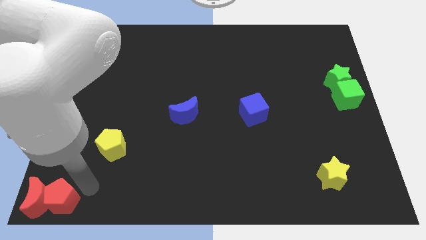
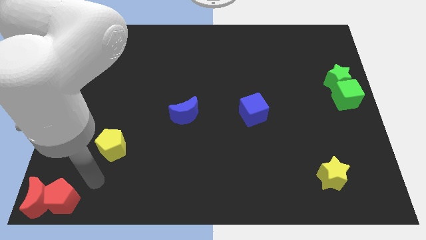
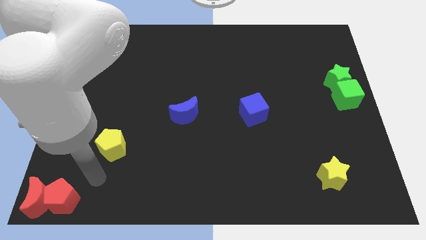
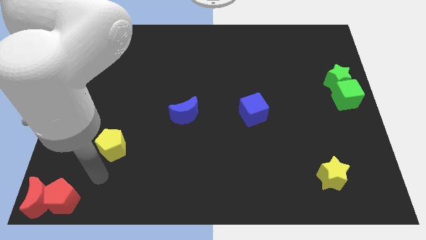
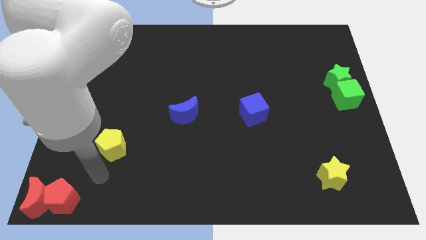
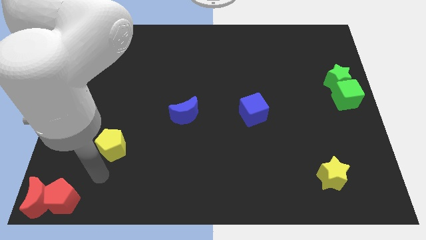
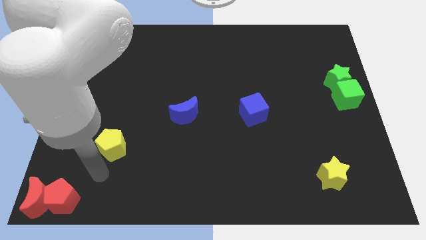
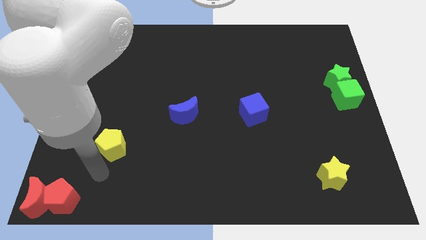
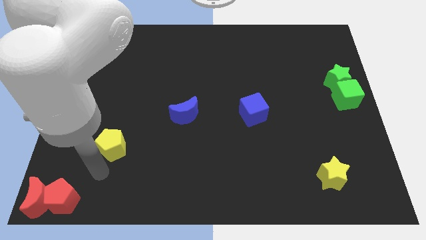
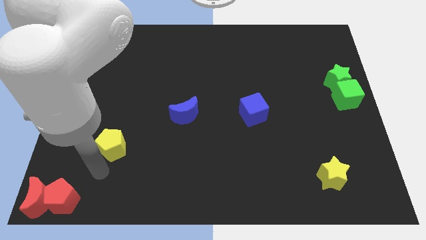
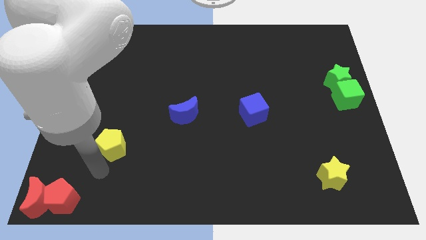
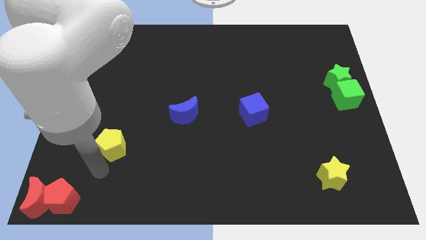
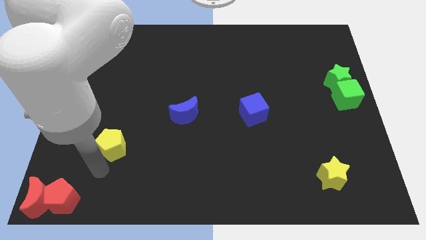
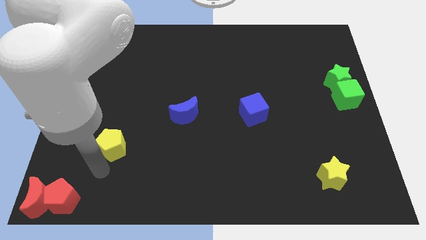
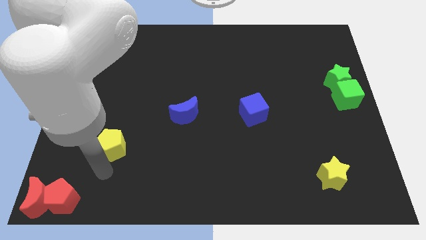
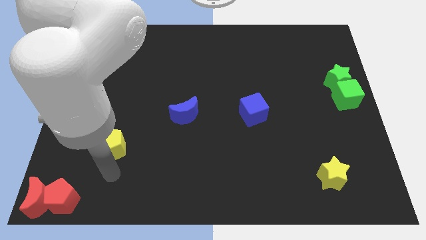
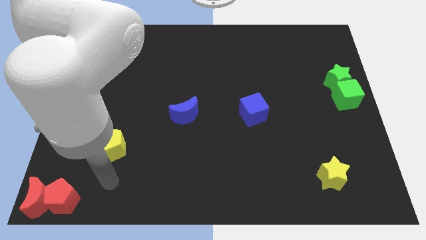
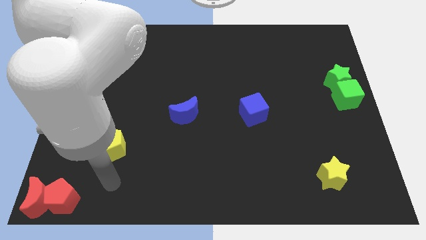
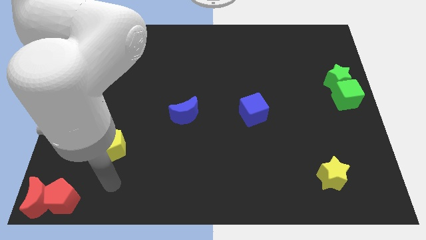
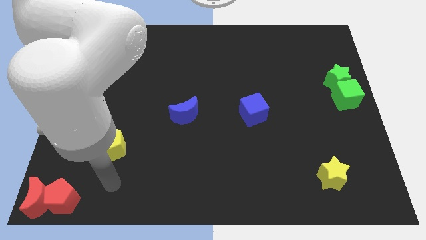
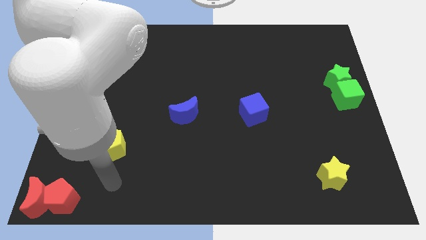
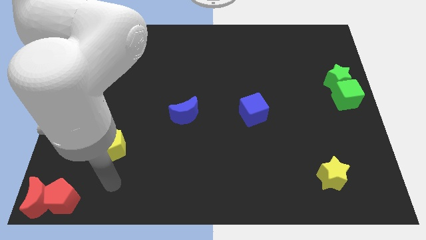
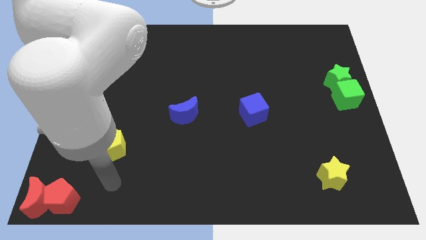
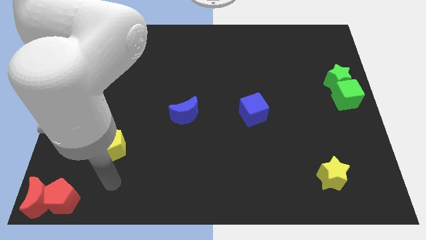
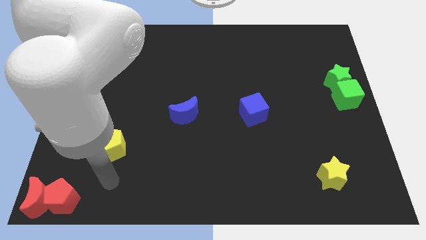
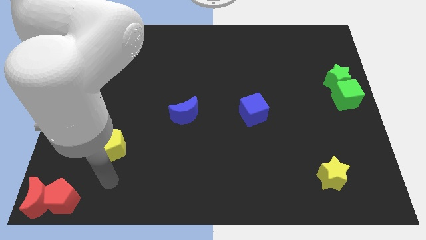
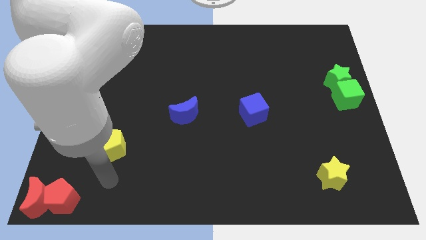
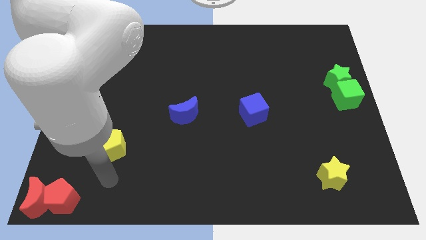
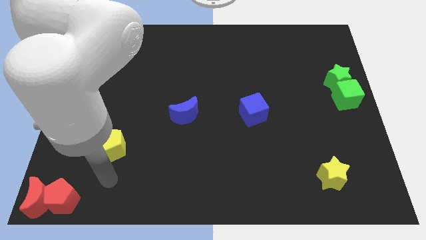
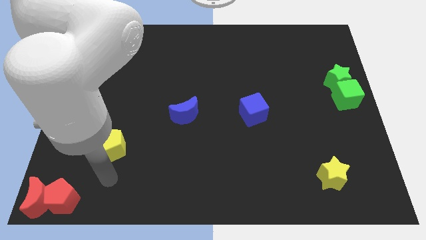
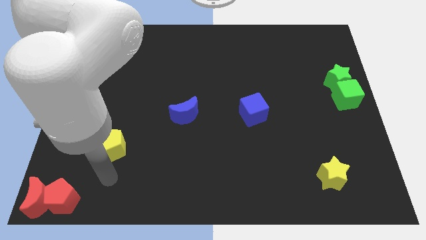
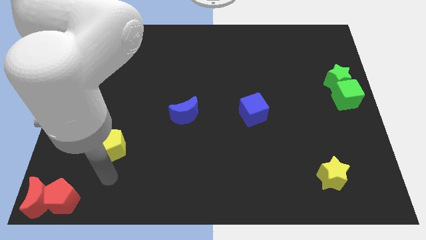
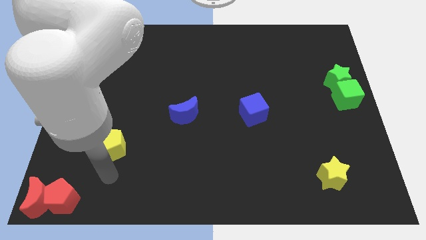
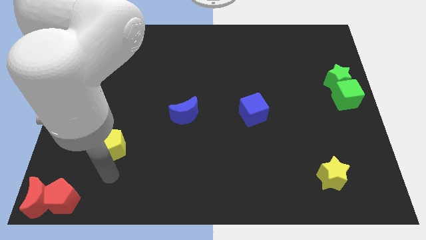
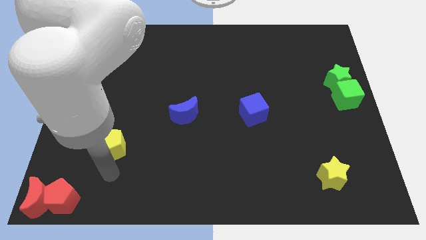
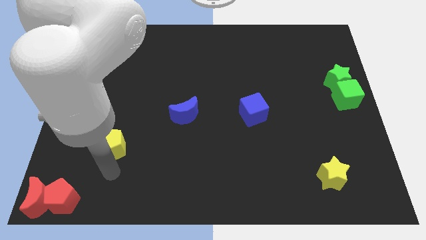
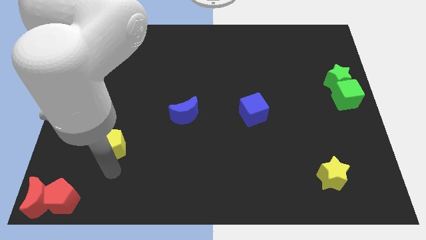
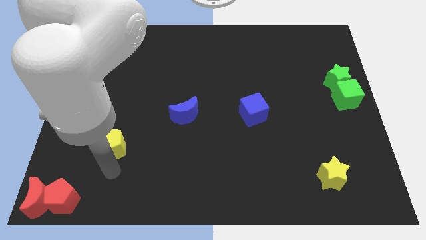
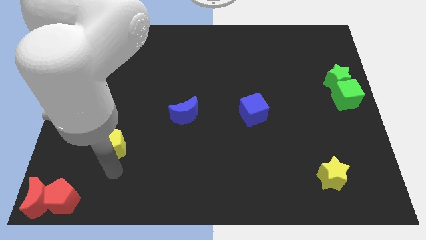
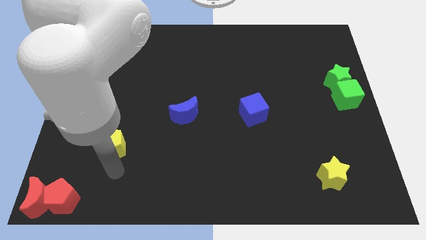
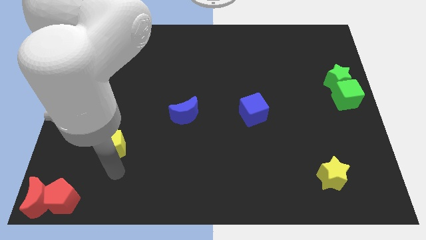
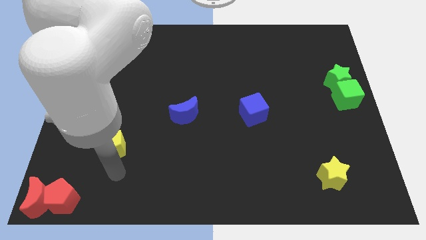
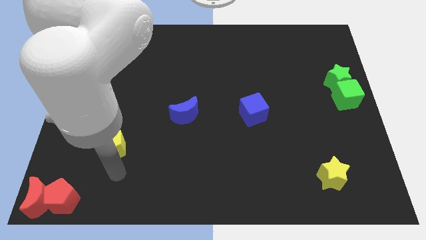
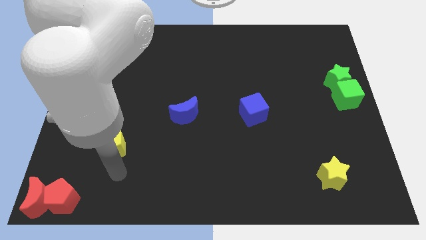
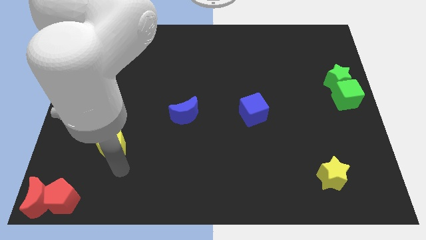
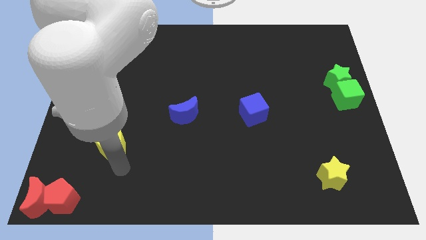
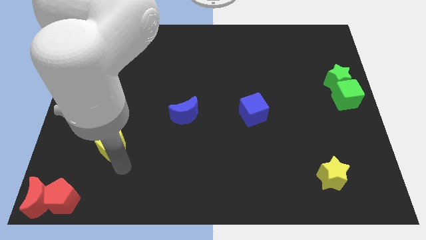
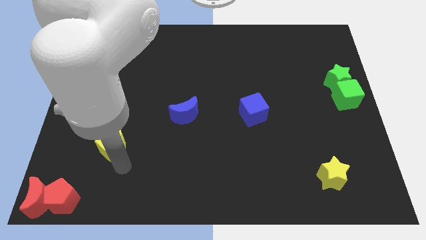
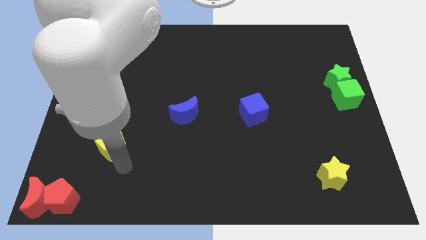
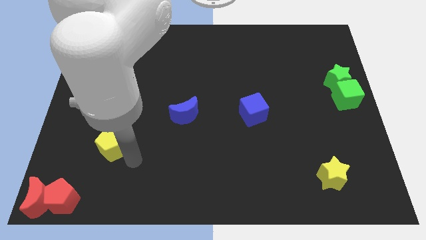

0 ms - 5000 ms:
move your arm close to yellow pentagon

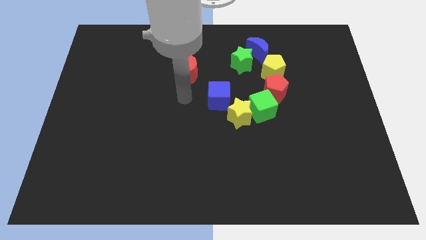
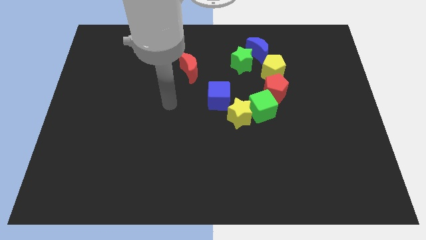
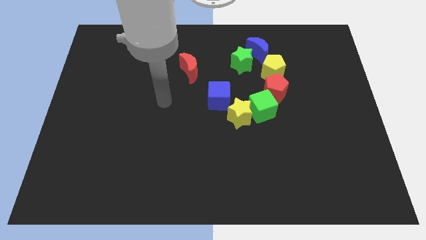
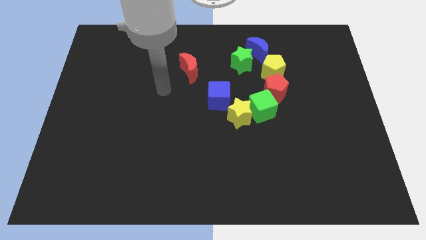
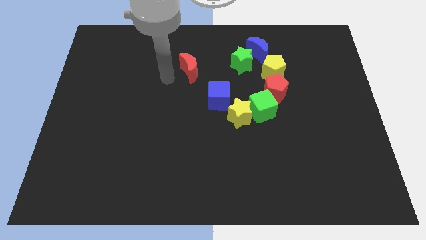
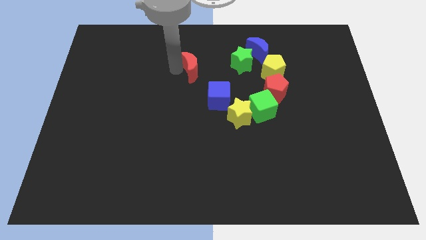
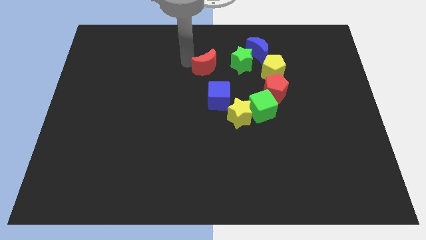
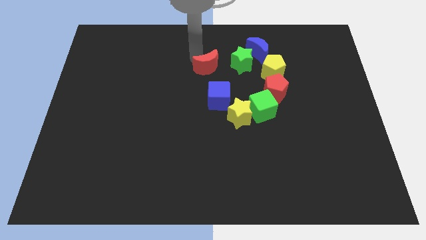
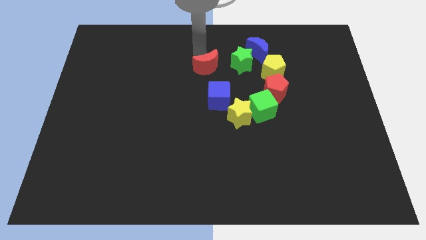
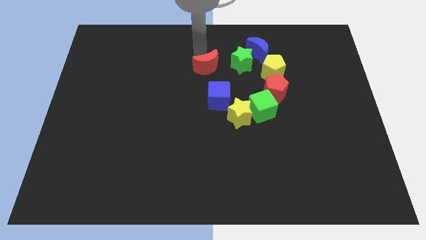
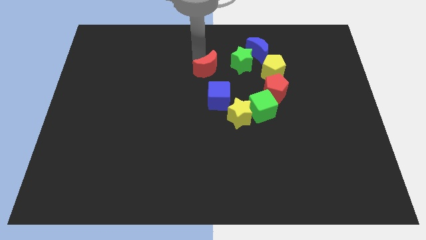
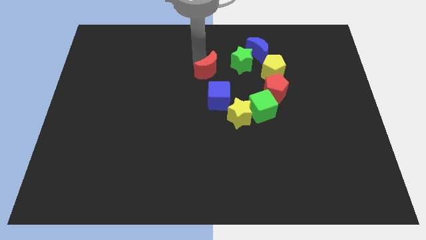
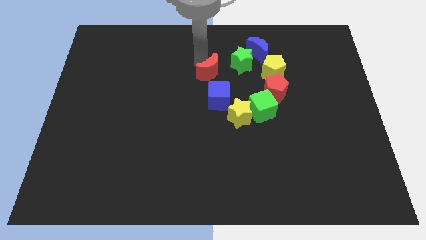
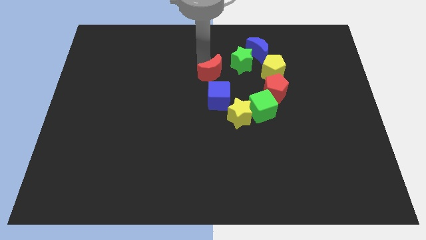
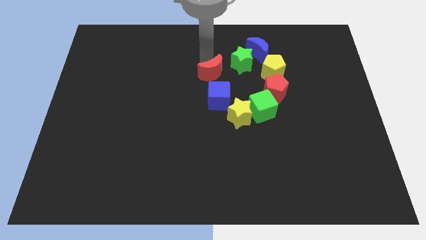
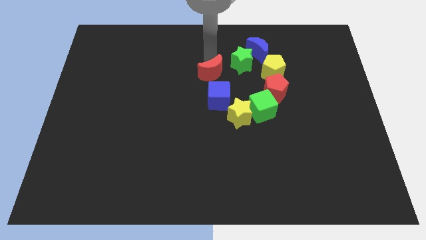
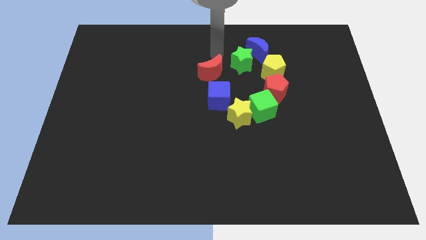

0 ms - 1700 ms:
push the red crescent to the top of the blue cube

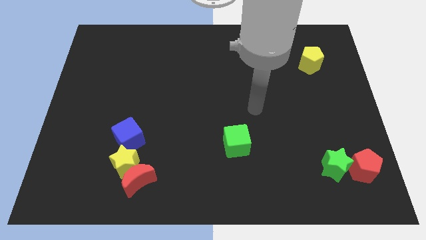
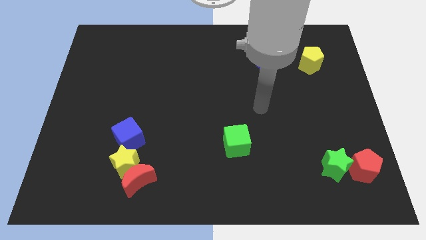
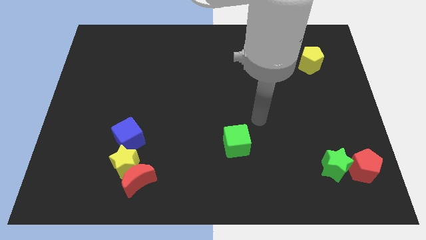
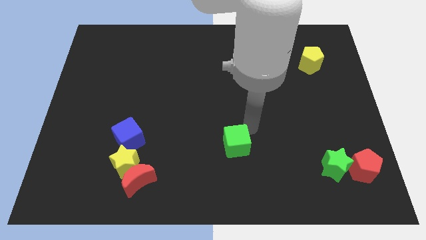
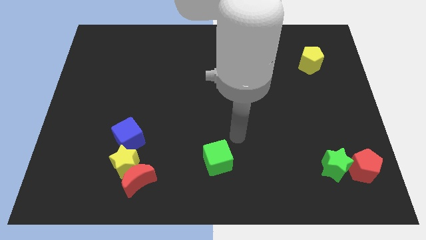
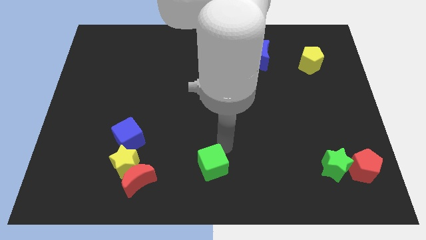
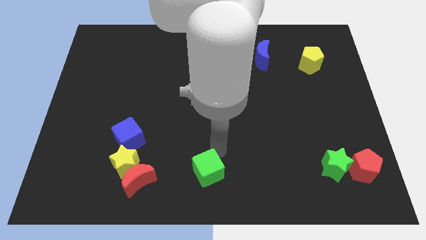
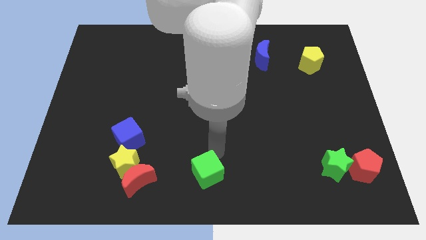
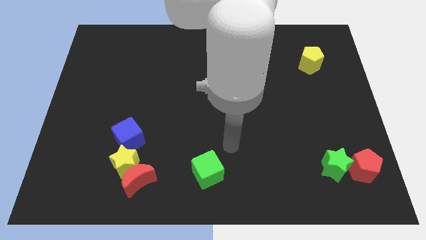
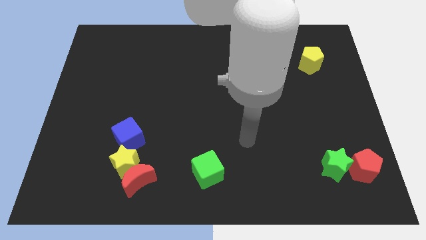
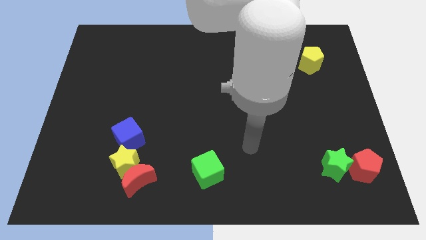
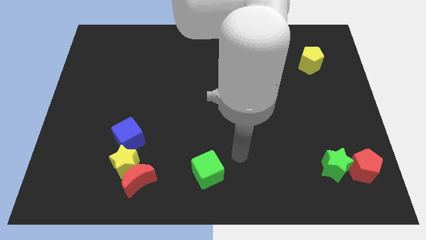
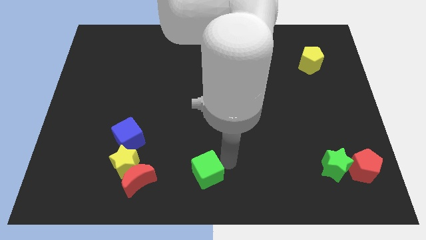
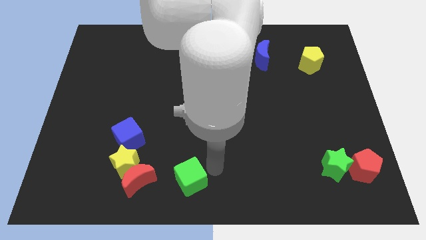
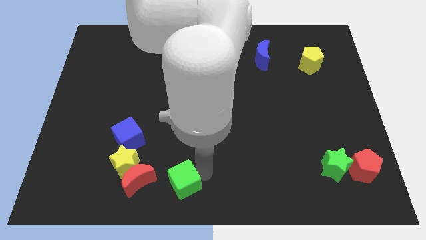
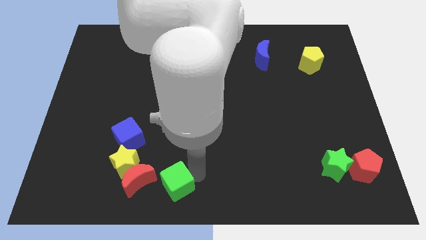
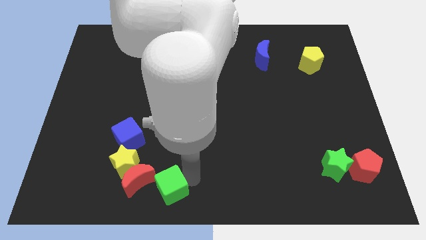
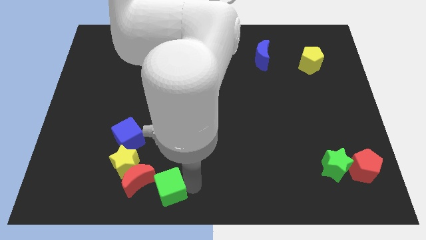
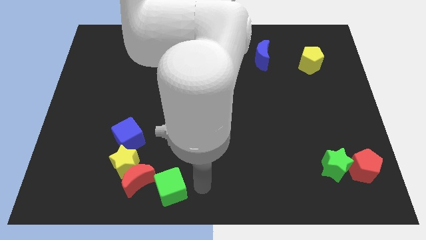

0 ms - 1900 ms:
place the green cube to the right bottom side of the red crescent

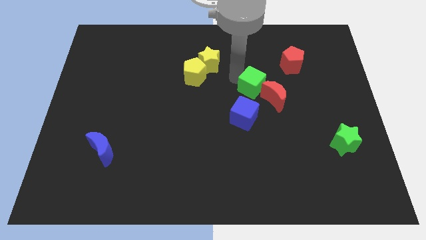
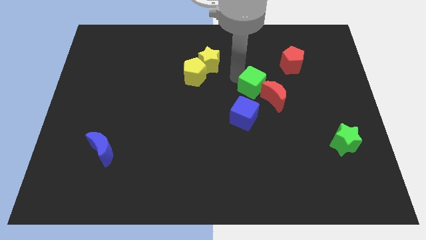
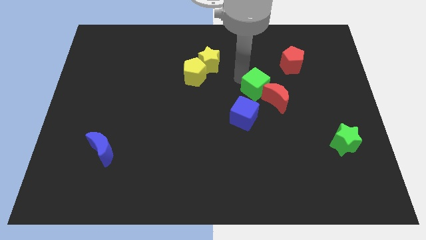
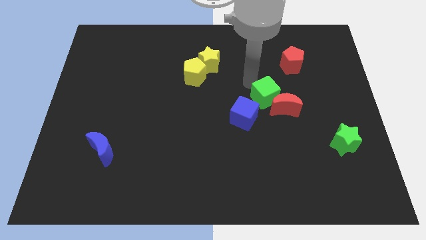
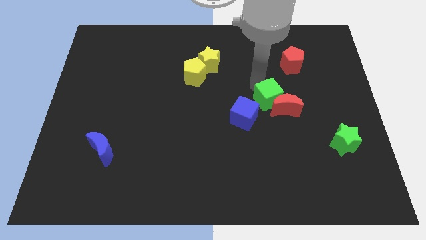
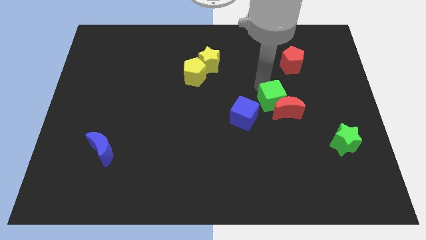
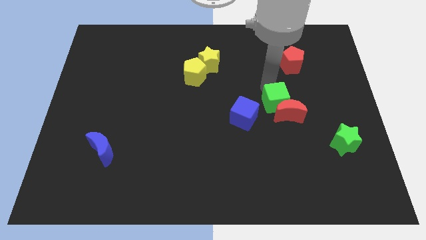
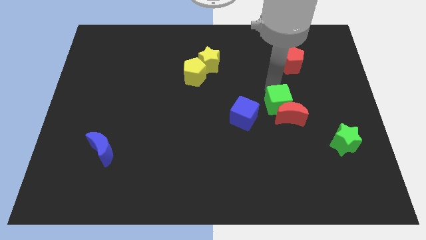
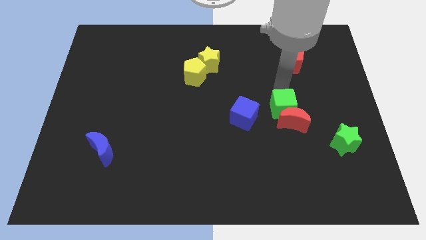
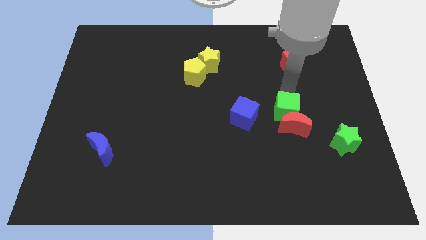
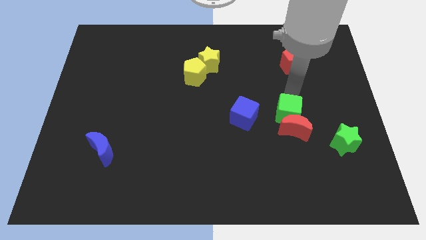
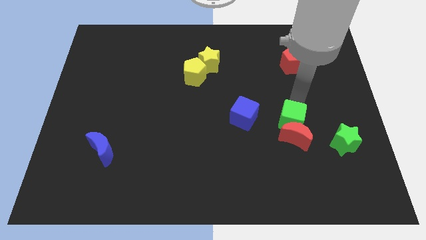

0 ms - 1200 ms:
slide the green cube and the red moon to the right side of the blue cube
